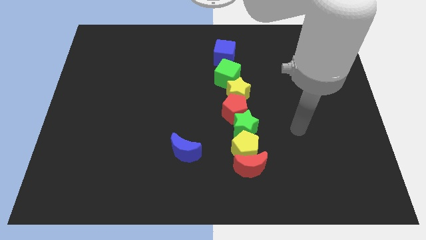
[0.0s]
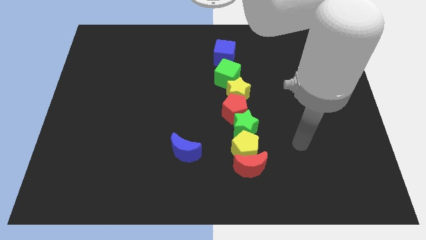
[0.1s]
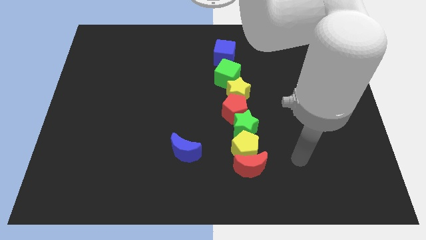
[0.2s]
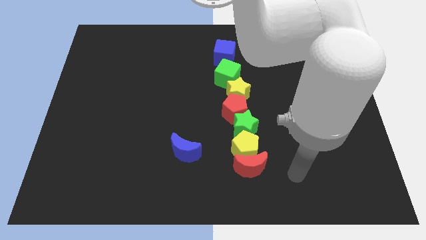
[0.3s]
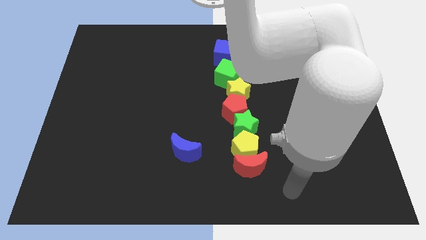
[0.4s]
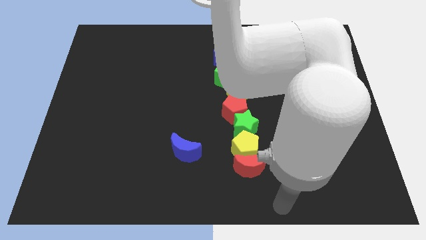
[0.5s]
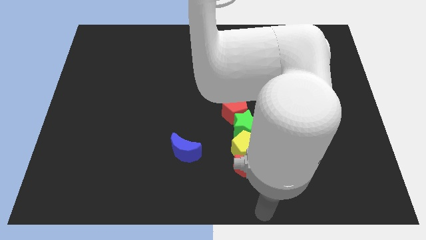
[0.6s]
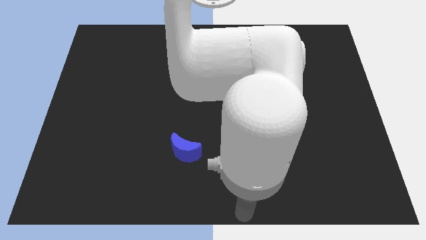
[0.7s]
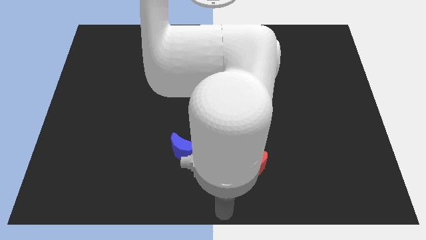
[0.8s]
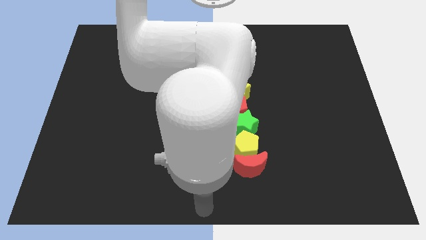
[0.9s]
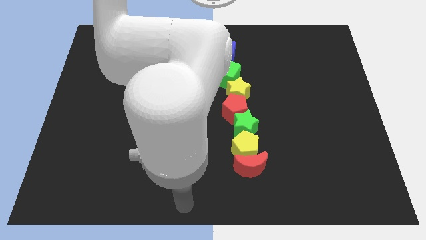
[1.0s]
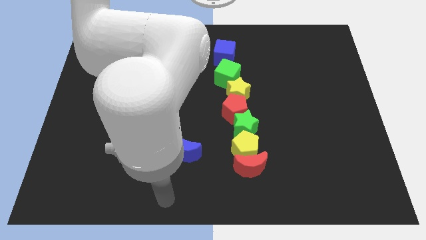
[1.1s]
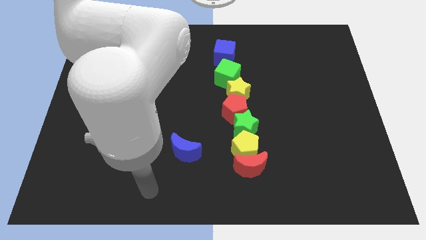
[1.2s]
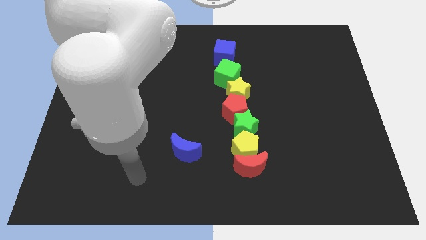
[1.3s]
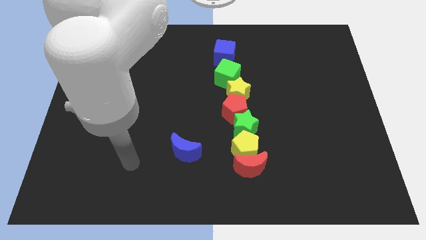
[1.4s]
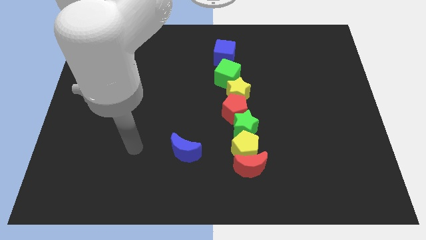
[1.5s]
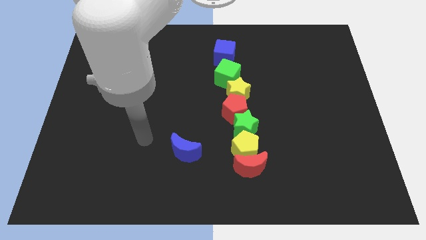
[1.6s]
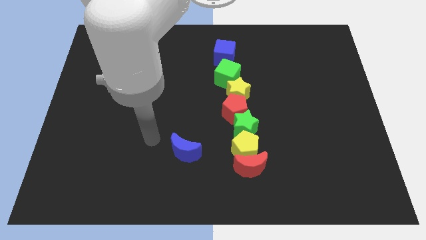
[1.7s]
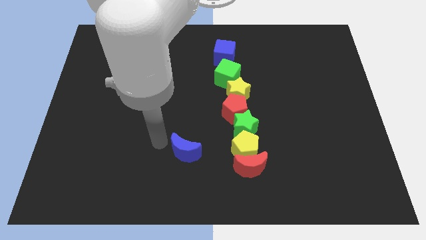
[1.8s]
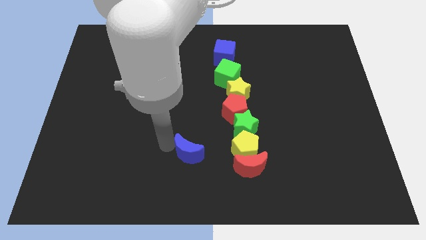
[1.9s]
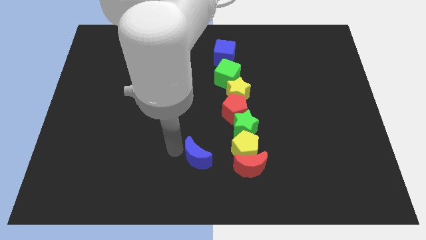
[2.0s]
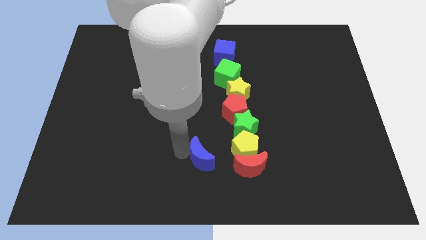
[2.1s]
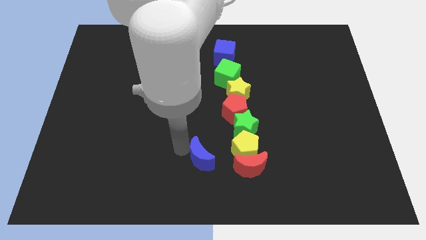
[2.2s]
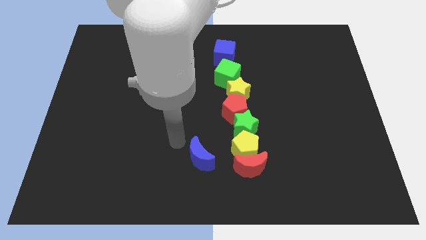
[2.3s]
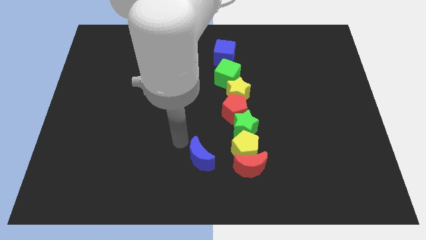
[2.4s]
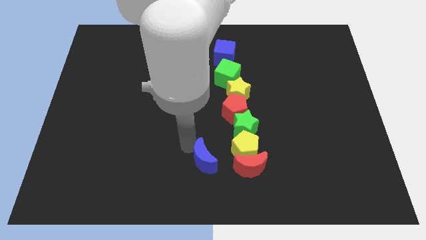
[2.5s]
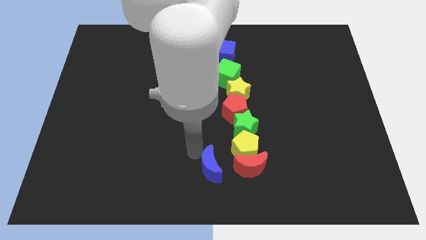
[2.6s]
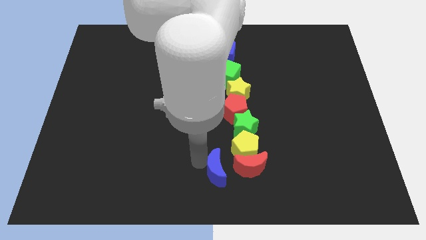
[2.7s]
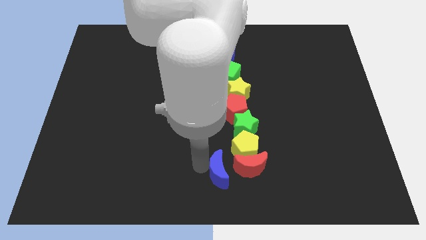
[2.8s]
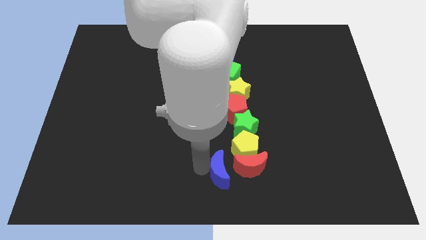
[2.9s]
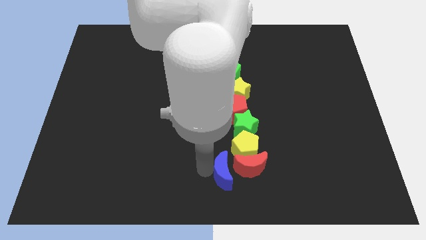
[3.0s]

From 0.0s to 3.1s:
place the blue crescent left to the red crescent

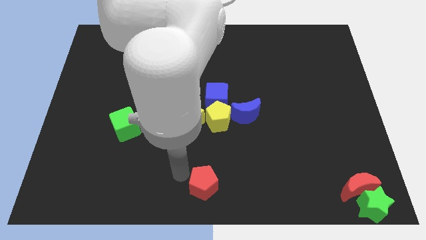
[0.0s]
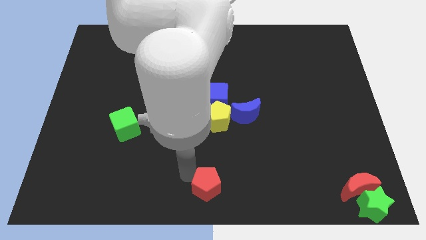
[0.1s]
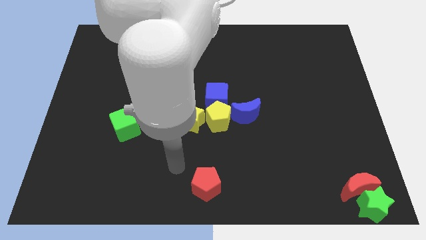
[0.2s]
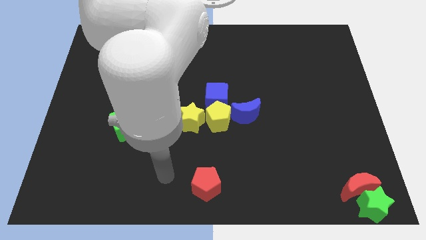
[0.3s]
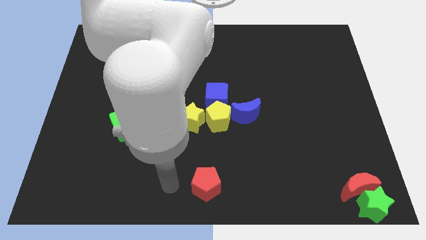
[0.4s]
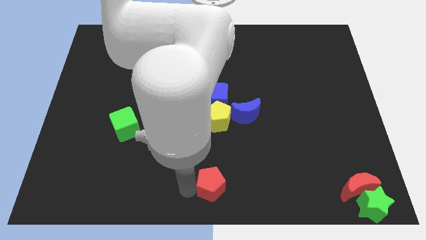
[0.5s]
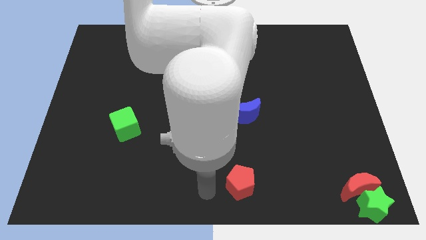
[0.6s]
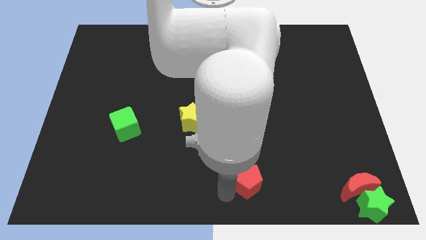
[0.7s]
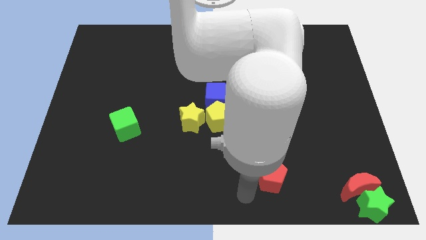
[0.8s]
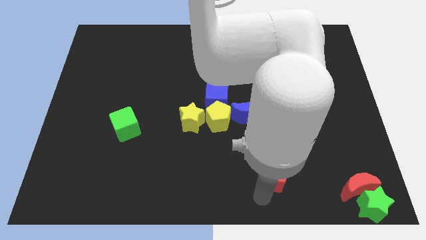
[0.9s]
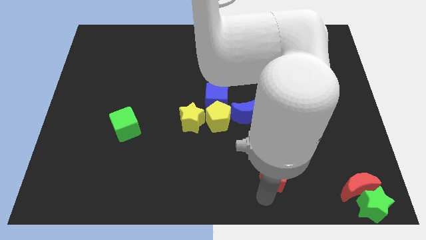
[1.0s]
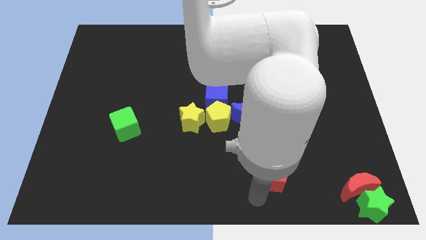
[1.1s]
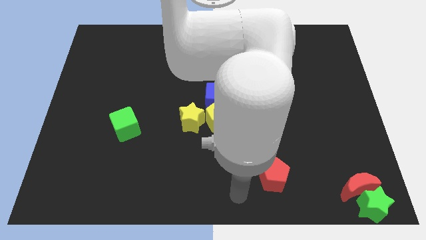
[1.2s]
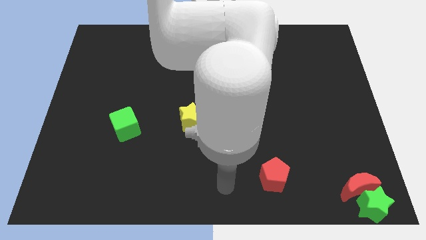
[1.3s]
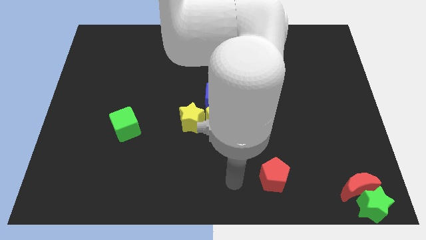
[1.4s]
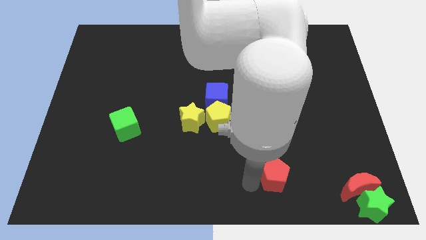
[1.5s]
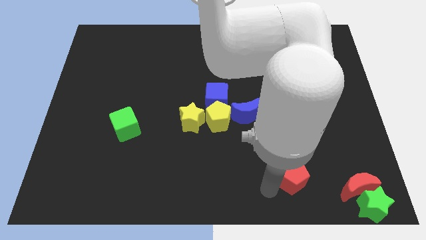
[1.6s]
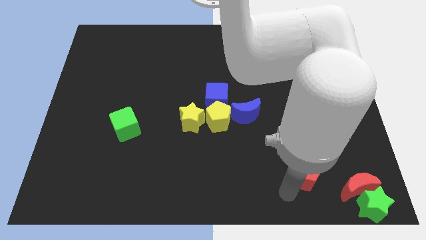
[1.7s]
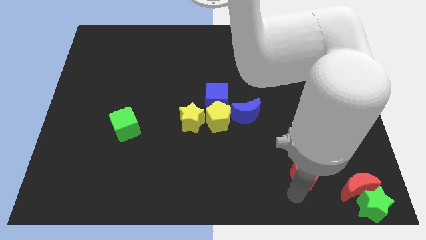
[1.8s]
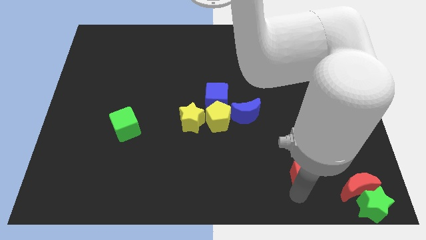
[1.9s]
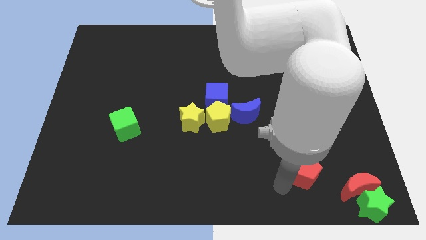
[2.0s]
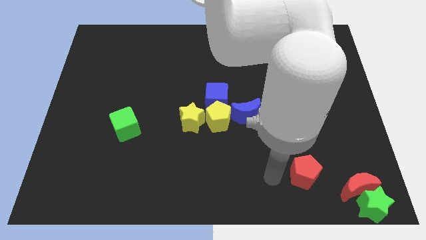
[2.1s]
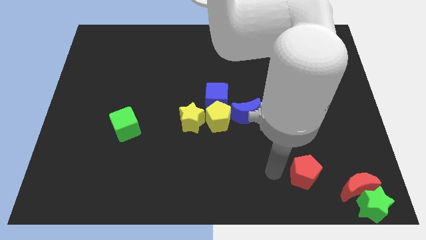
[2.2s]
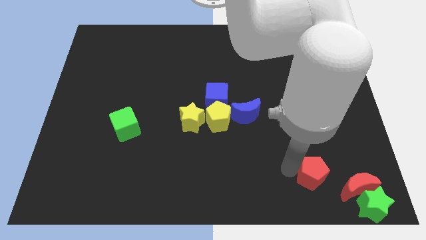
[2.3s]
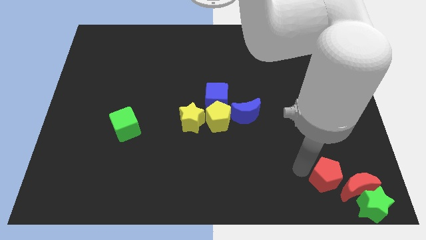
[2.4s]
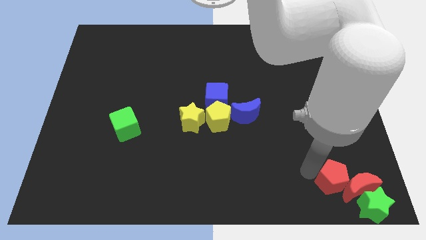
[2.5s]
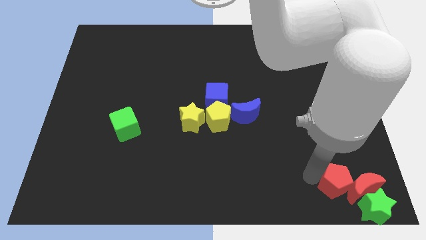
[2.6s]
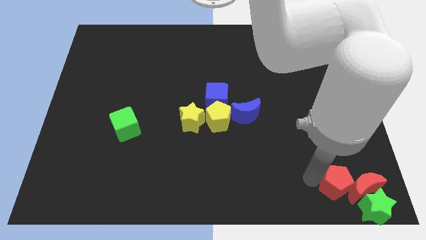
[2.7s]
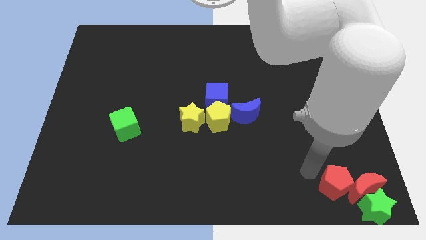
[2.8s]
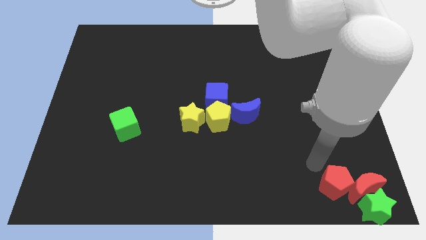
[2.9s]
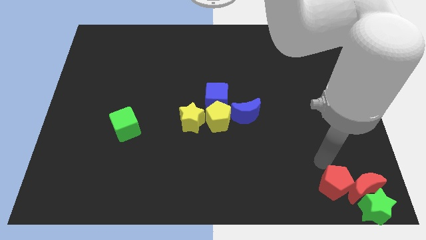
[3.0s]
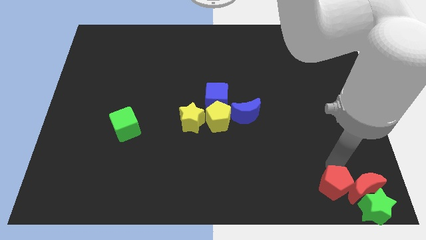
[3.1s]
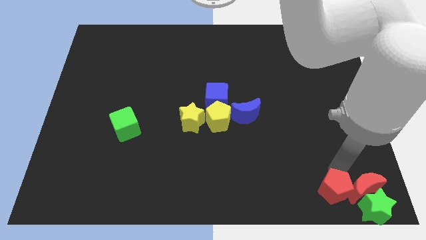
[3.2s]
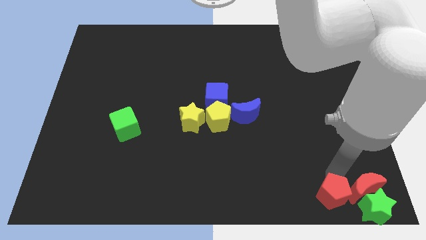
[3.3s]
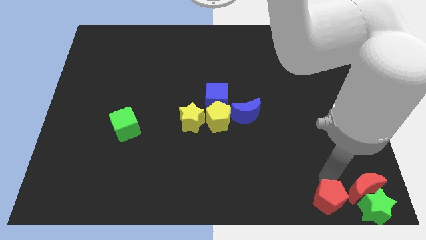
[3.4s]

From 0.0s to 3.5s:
place the red pentagon to the bottom right

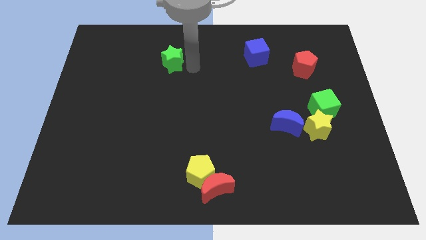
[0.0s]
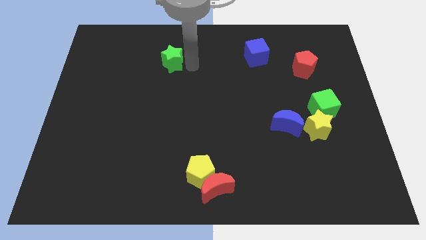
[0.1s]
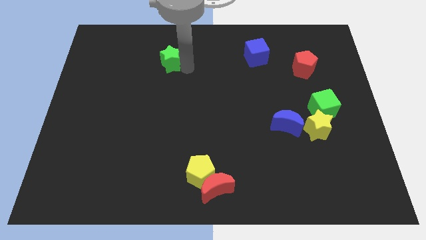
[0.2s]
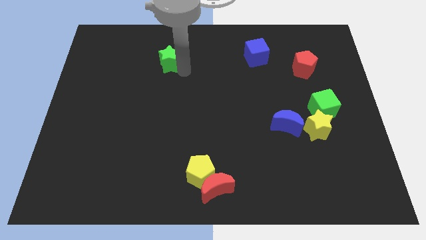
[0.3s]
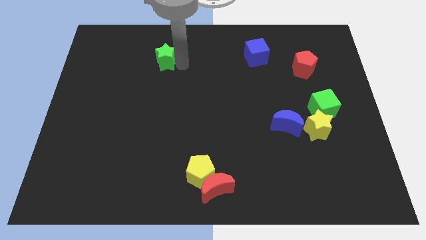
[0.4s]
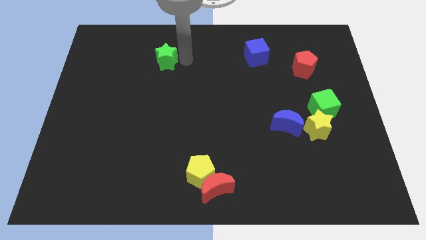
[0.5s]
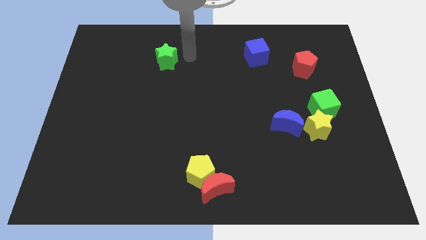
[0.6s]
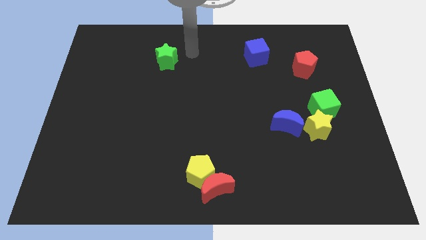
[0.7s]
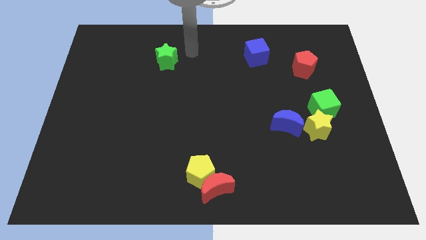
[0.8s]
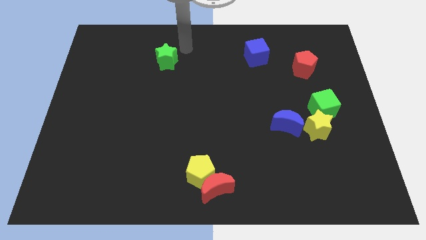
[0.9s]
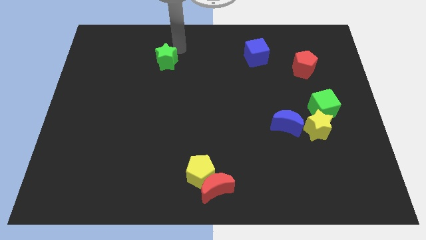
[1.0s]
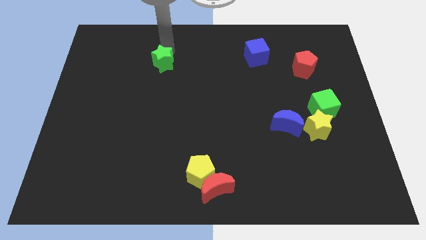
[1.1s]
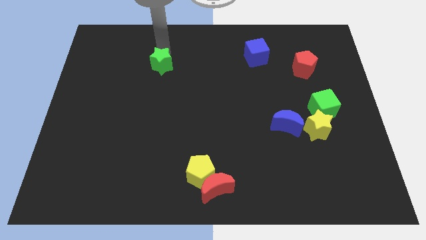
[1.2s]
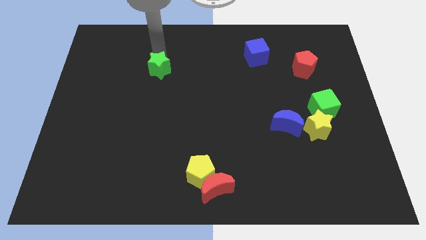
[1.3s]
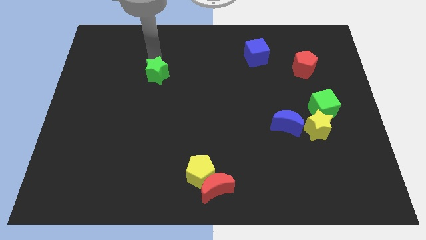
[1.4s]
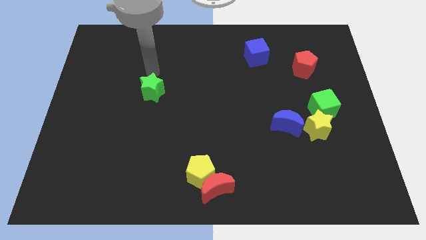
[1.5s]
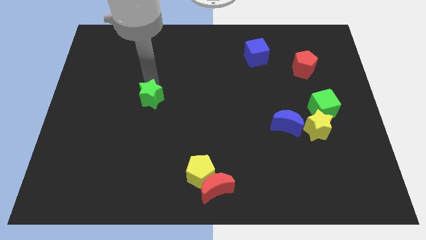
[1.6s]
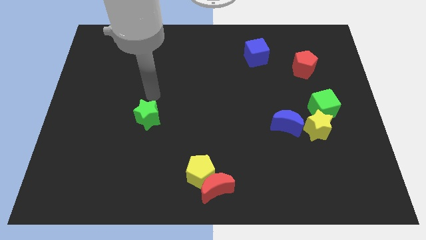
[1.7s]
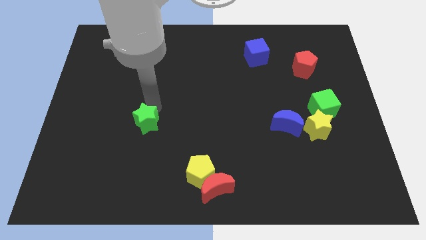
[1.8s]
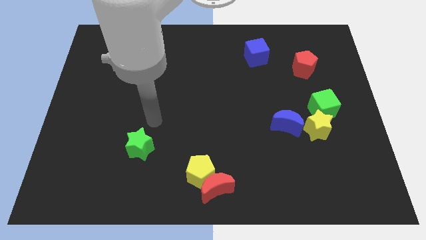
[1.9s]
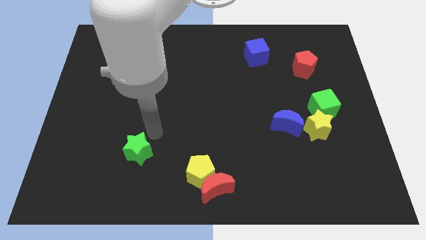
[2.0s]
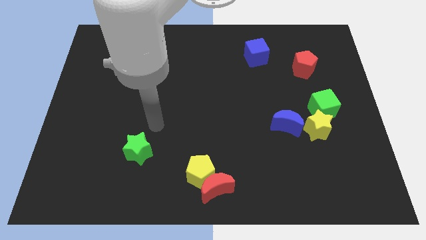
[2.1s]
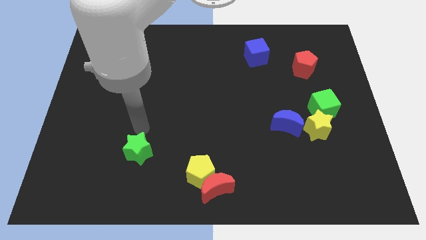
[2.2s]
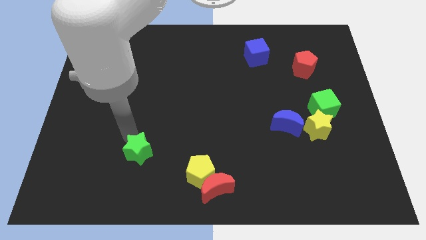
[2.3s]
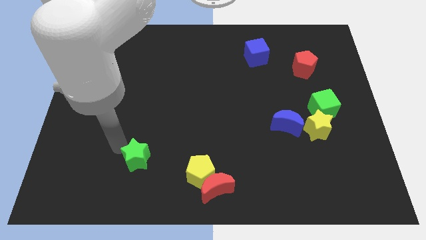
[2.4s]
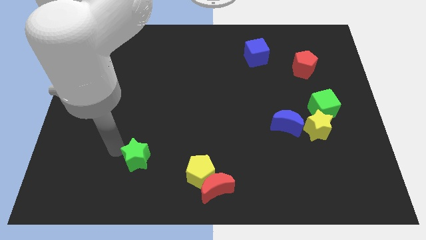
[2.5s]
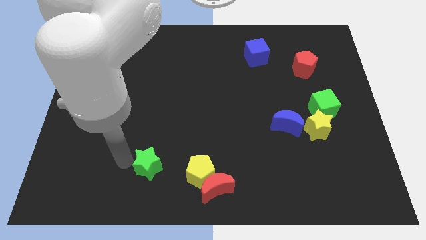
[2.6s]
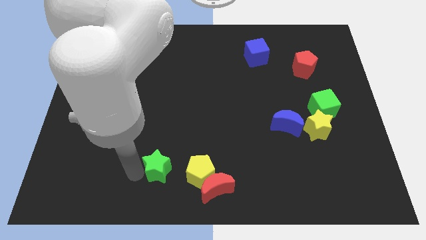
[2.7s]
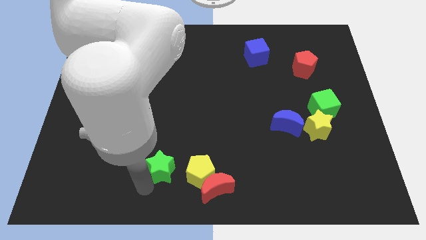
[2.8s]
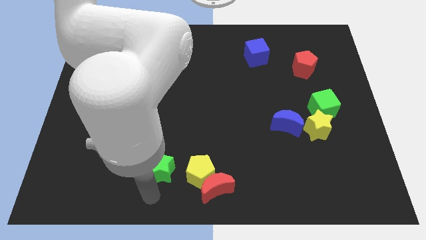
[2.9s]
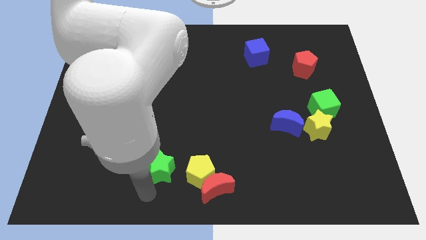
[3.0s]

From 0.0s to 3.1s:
place the green star to the left of yellow pentagon
